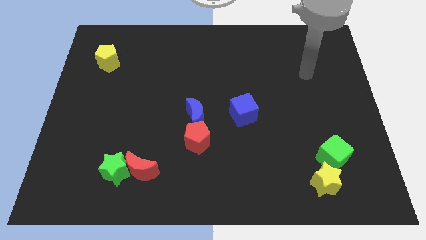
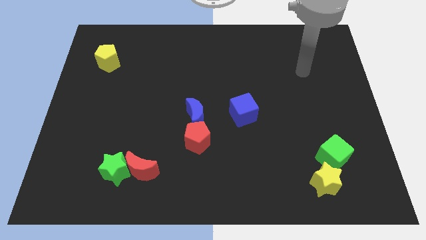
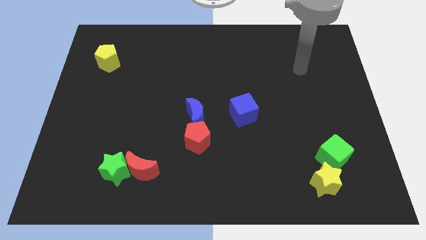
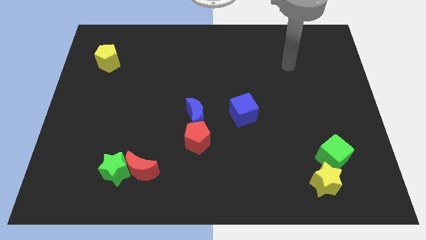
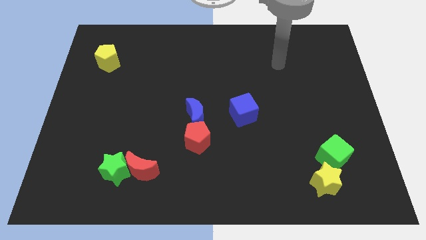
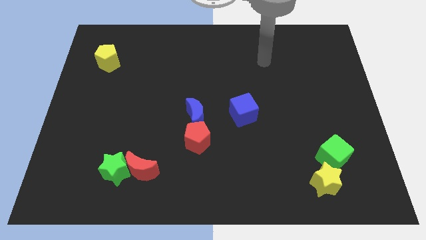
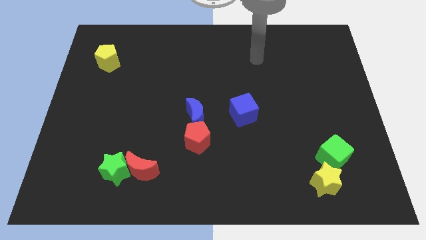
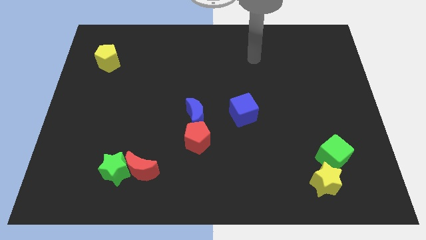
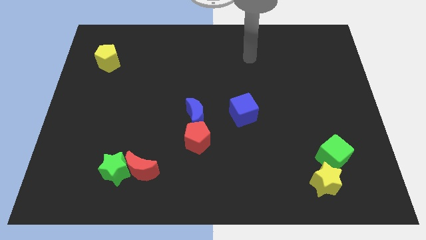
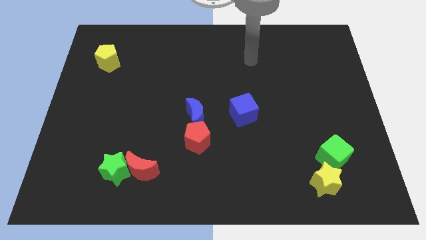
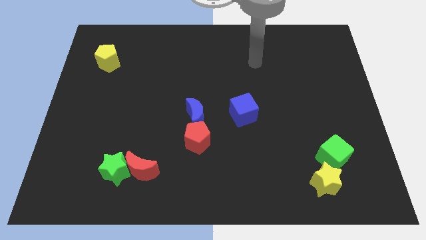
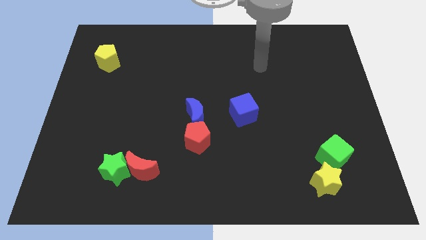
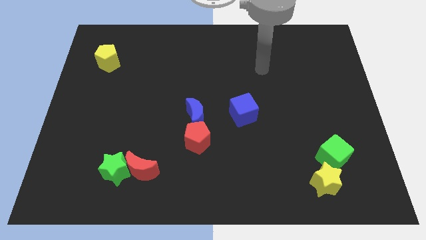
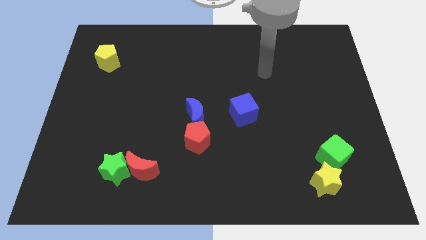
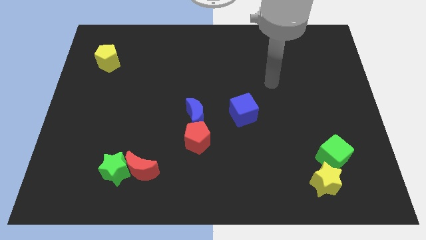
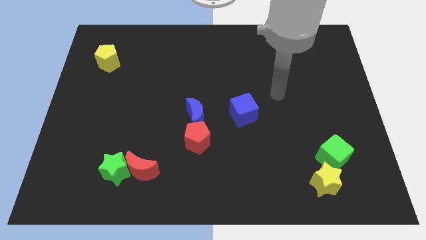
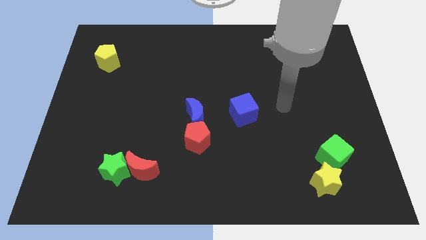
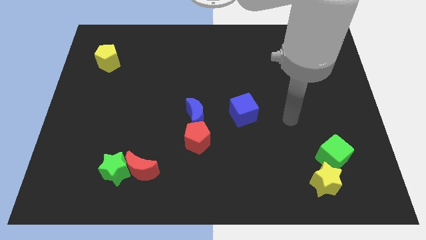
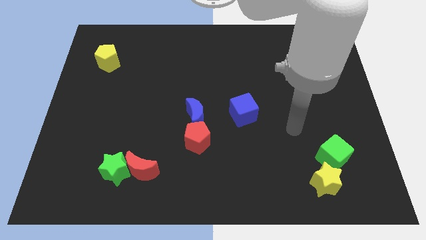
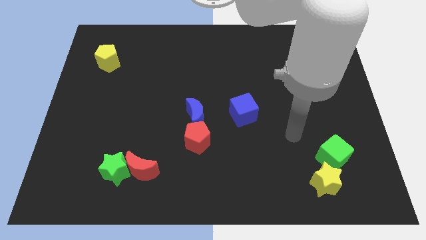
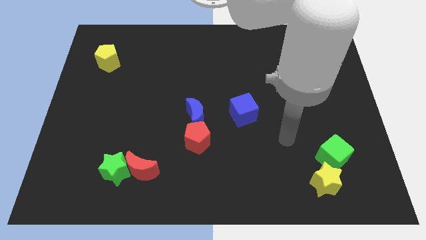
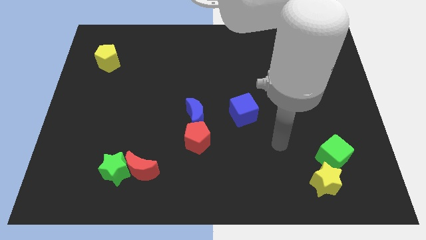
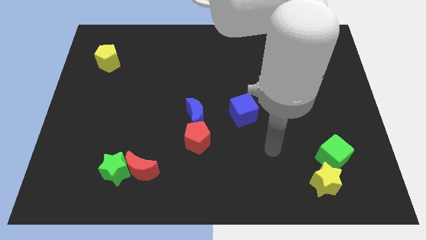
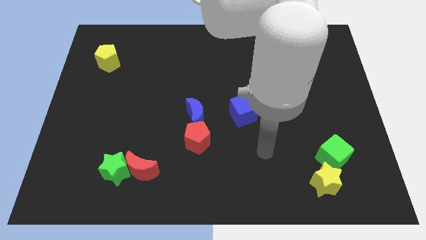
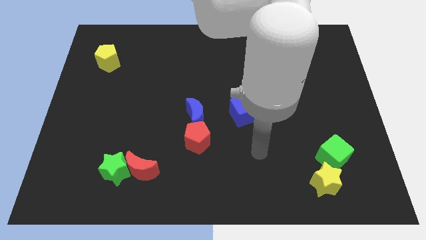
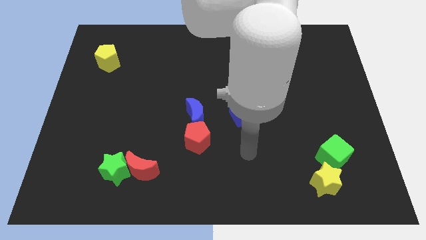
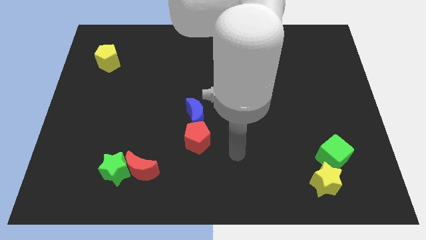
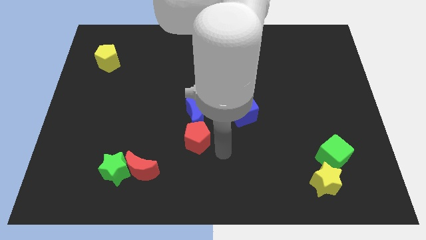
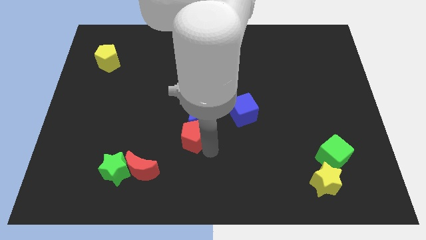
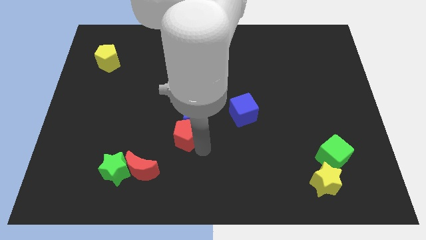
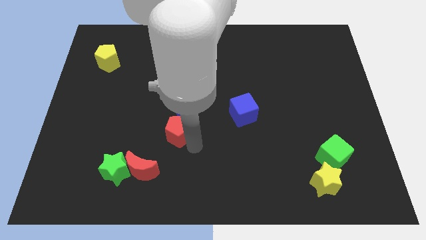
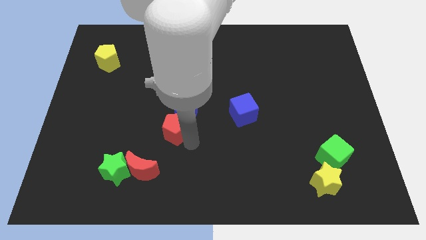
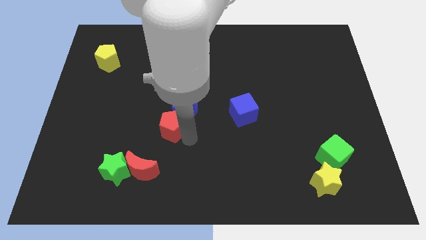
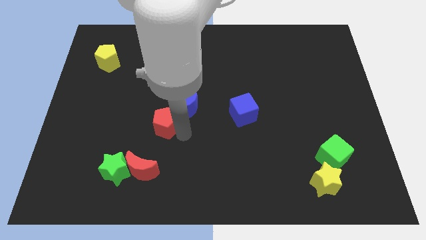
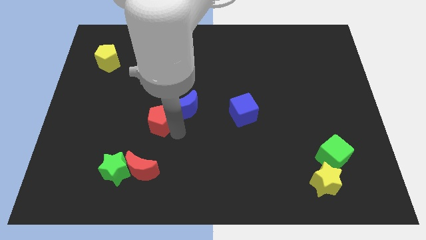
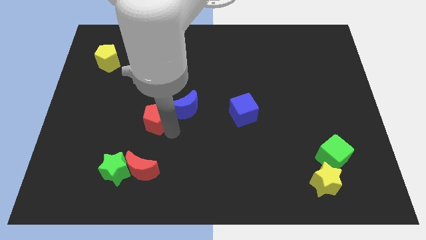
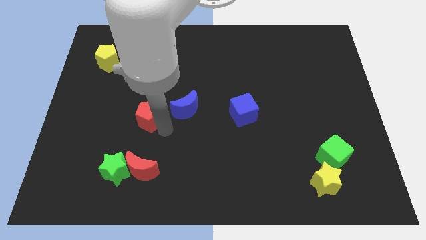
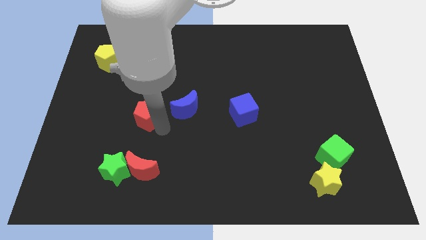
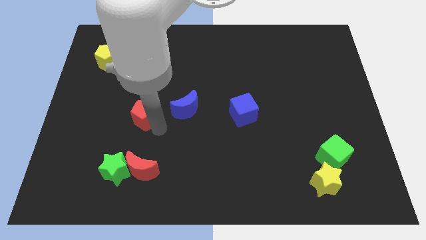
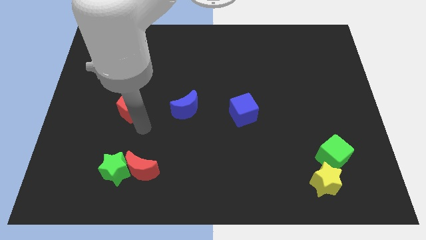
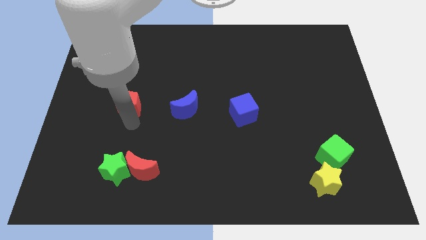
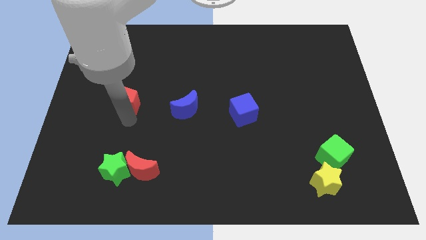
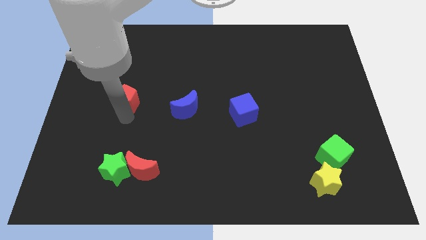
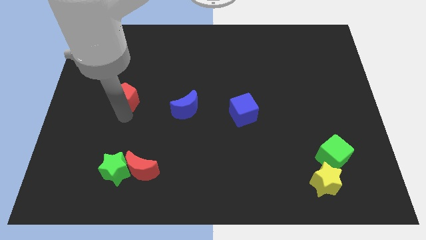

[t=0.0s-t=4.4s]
separate the red pentagon from the blue moon

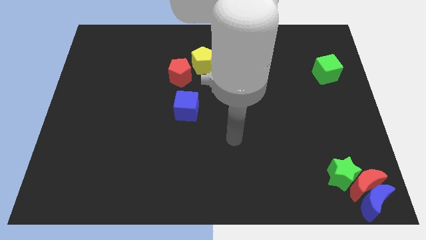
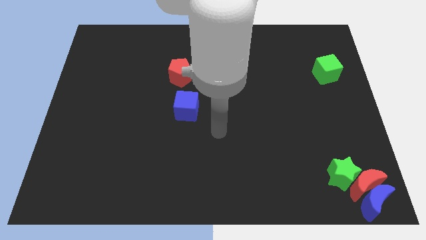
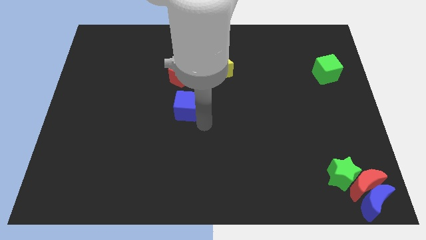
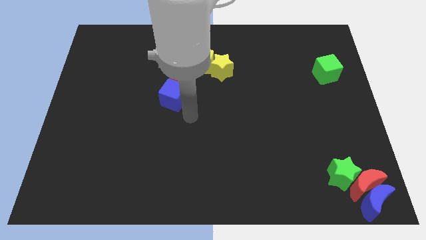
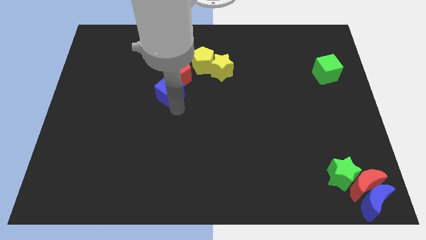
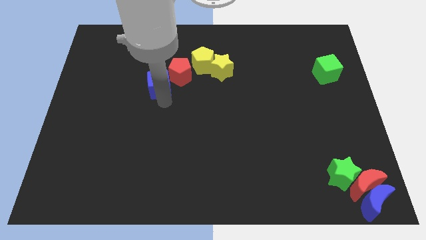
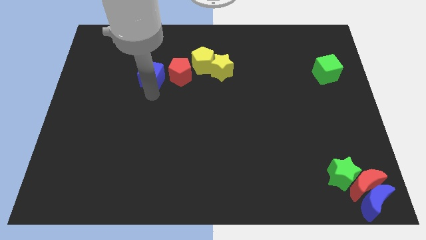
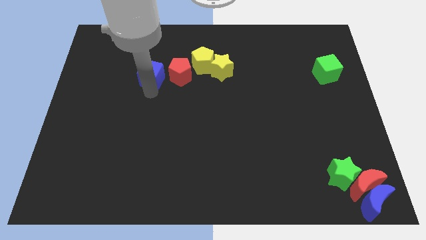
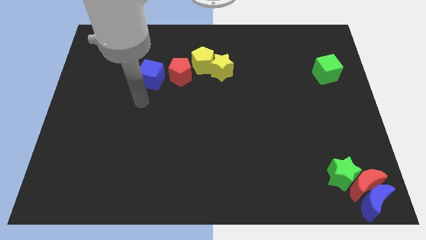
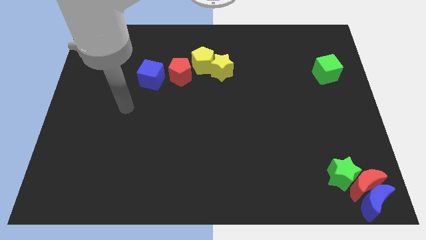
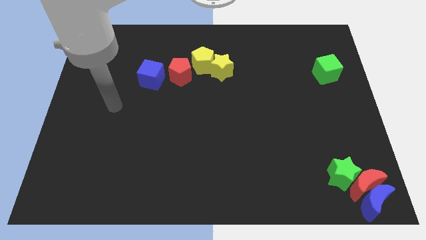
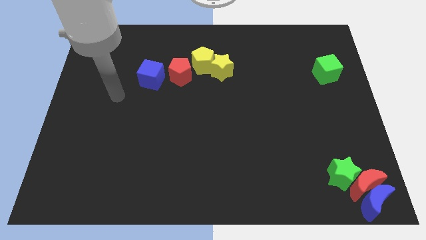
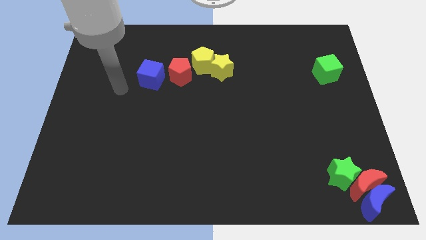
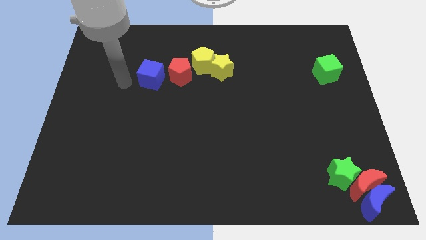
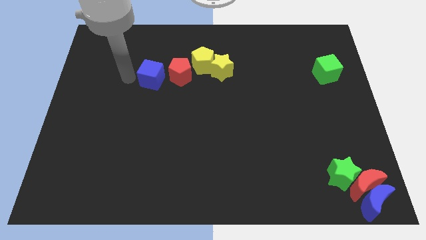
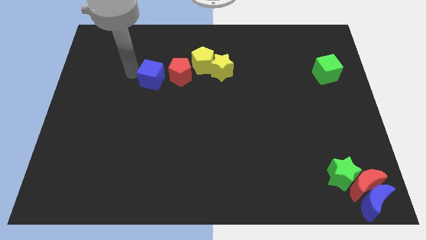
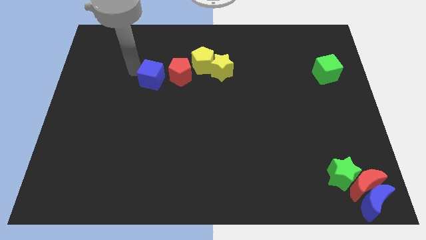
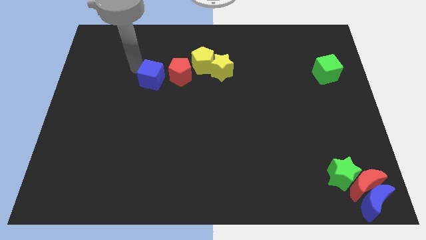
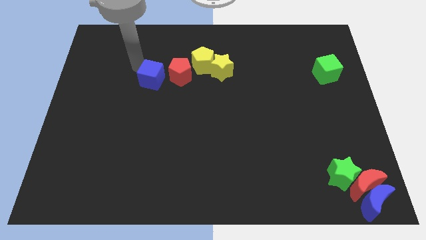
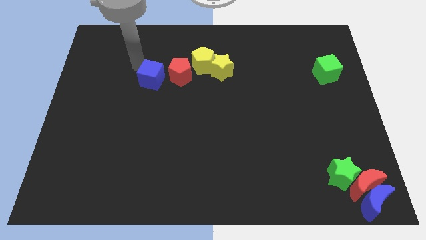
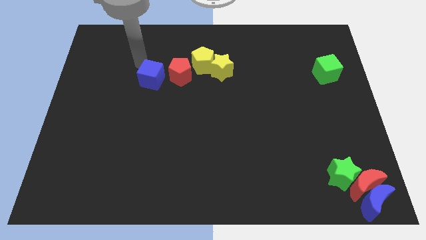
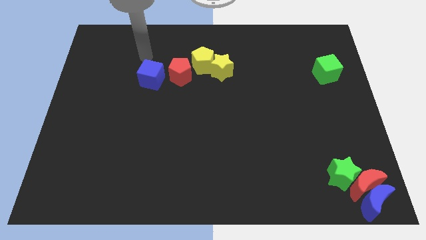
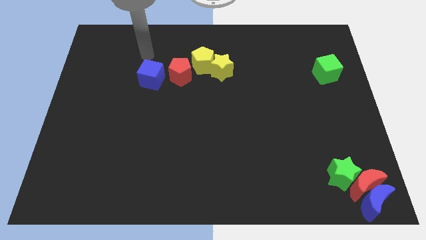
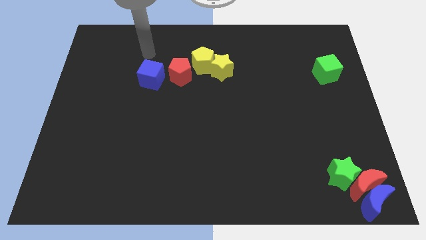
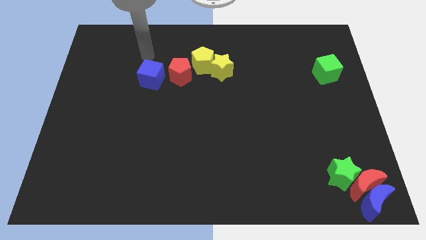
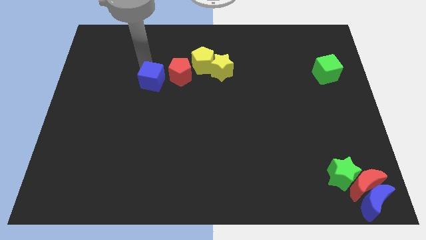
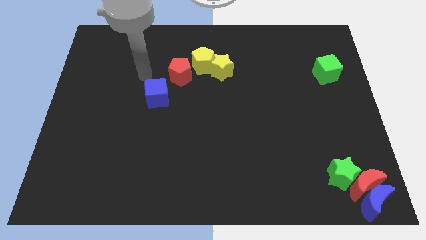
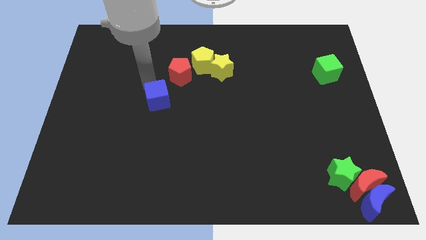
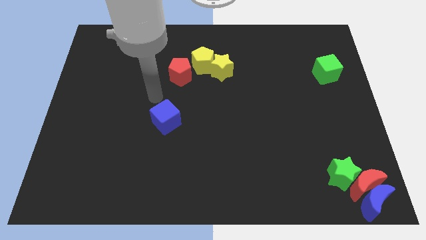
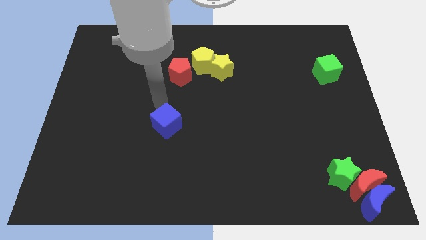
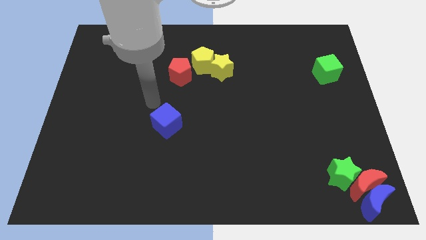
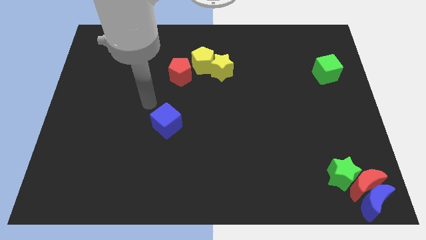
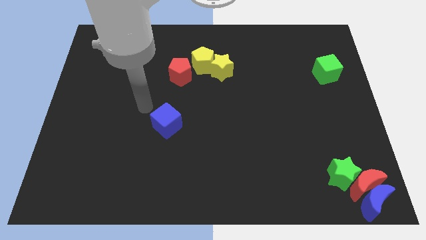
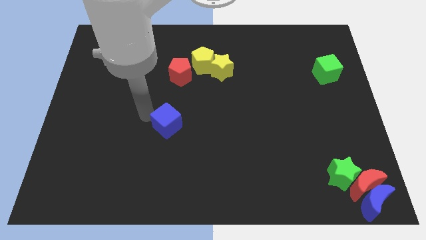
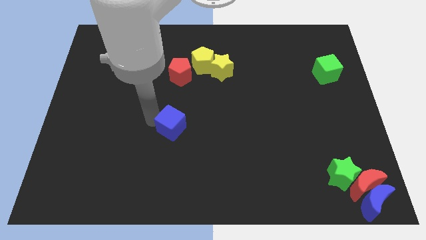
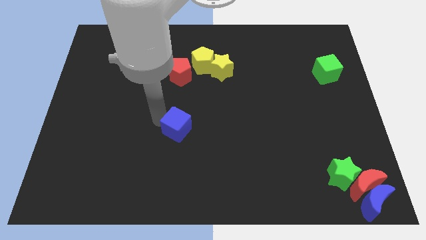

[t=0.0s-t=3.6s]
place the blue cube vertically below the red pentagon

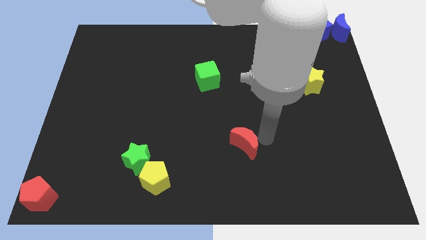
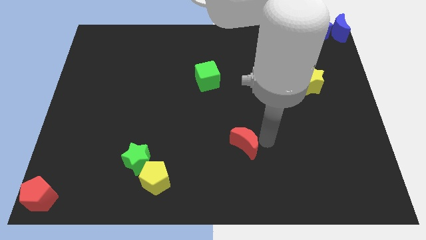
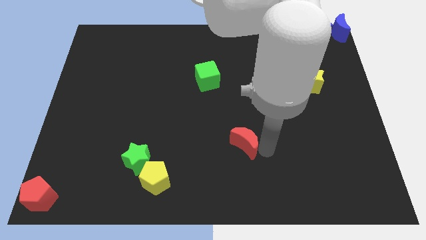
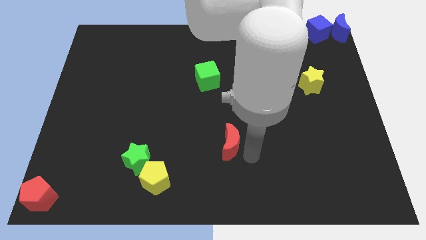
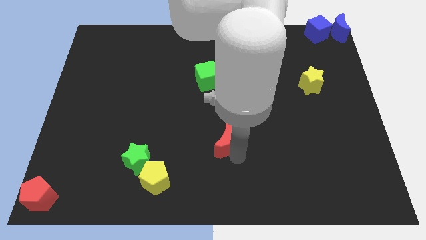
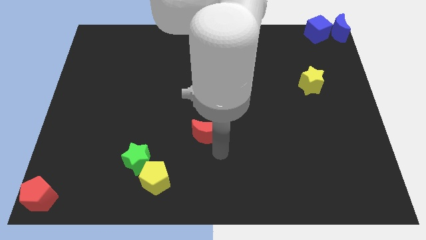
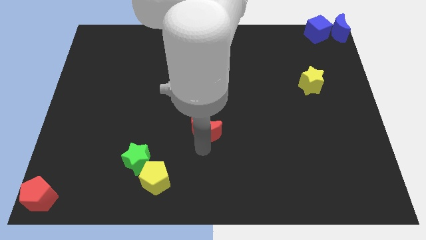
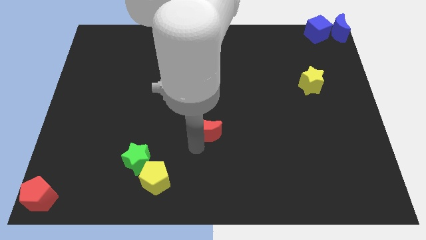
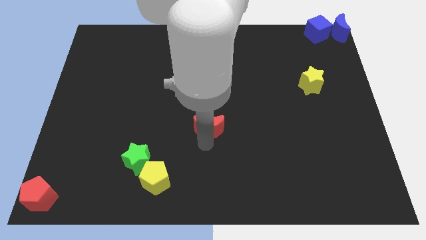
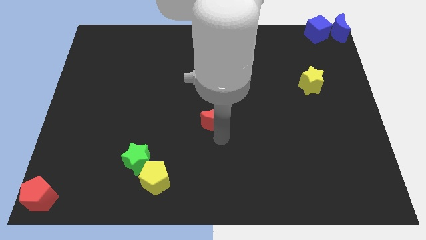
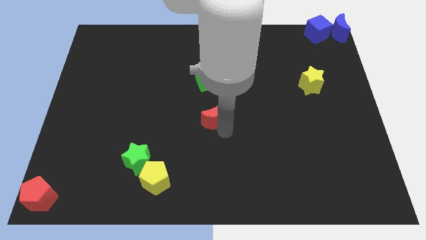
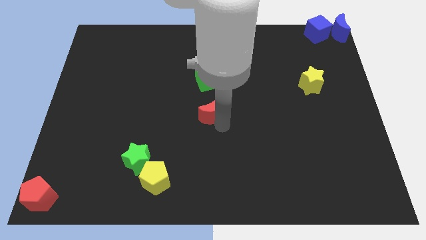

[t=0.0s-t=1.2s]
slide the red moon towards the center
